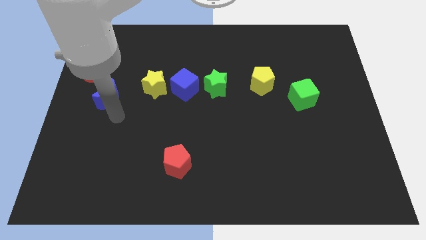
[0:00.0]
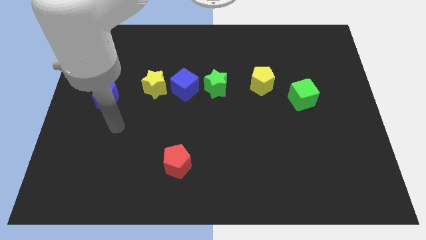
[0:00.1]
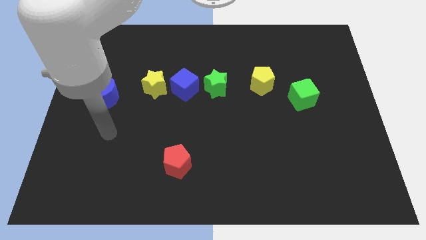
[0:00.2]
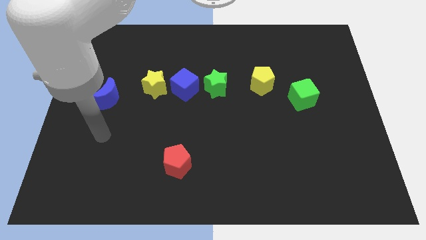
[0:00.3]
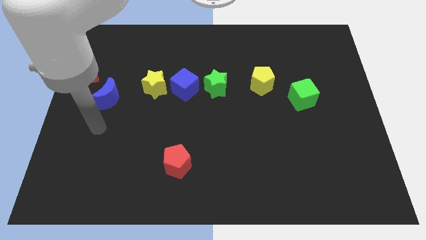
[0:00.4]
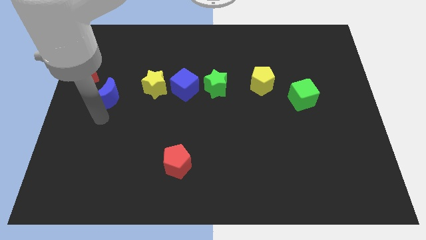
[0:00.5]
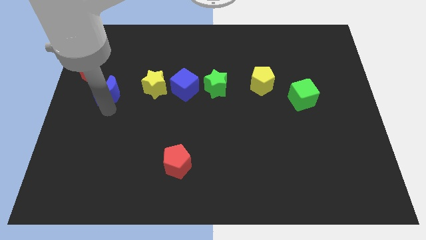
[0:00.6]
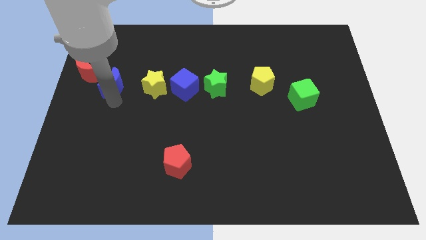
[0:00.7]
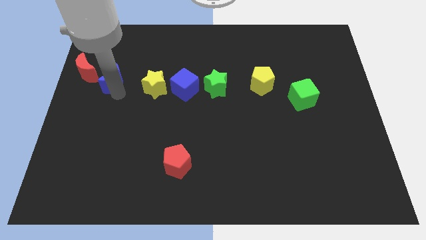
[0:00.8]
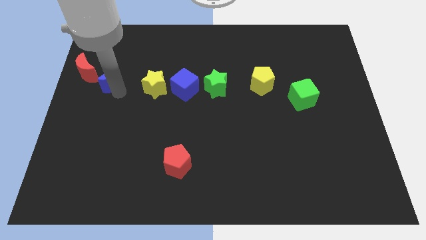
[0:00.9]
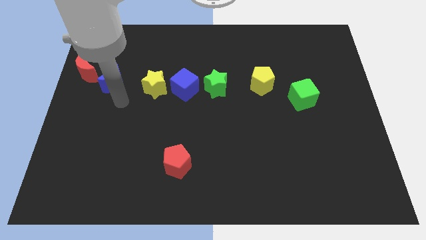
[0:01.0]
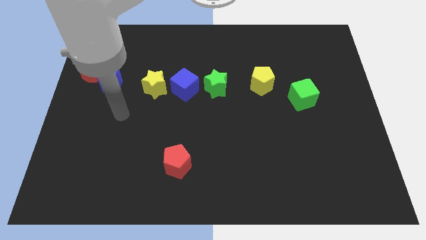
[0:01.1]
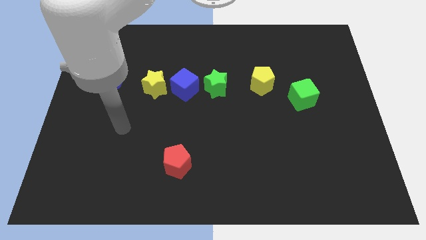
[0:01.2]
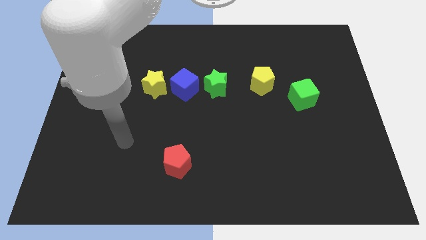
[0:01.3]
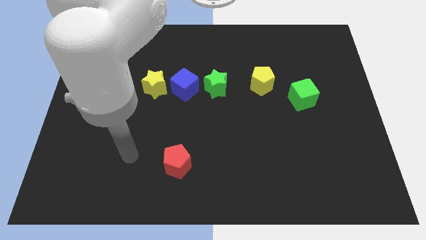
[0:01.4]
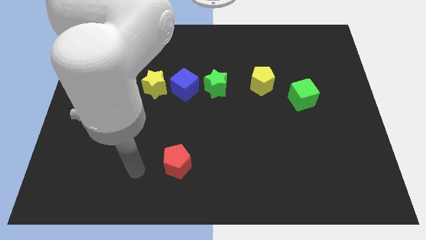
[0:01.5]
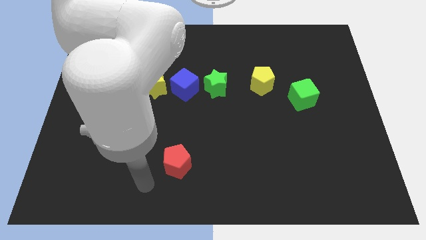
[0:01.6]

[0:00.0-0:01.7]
put the blue moon parallel left to the yellow star

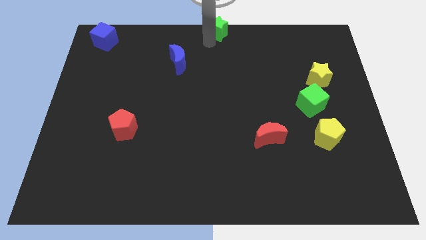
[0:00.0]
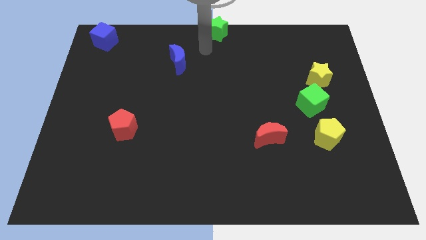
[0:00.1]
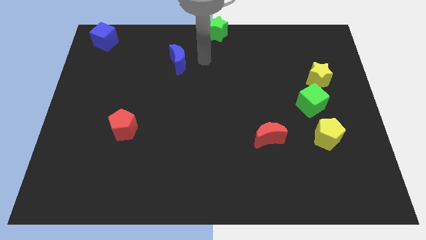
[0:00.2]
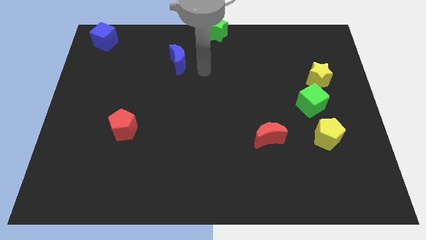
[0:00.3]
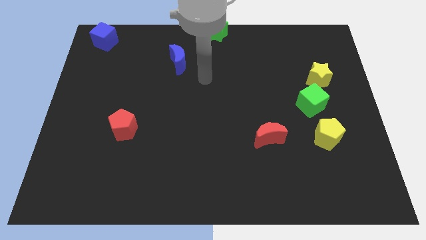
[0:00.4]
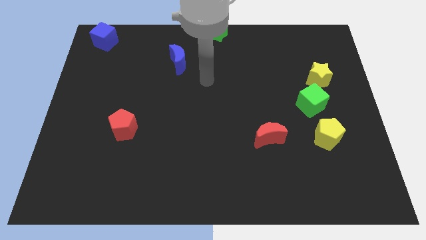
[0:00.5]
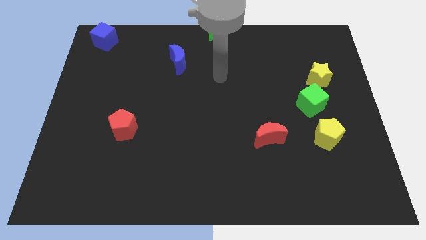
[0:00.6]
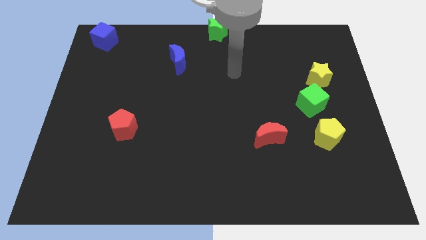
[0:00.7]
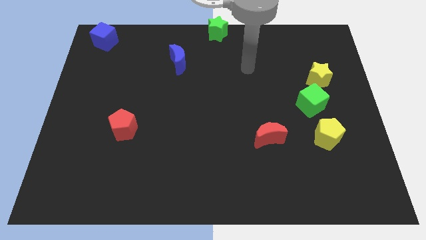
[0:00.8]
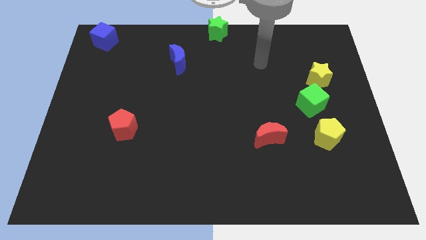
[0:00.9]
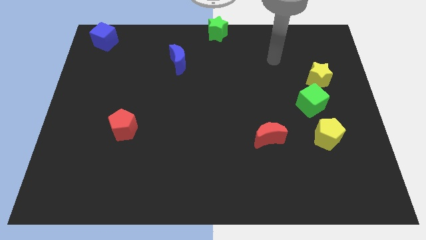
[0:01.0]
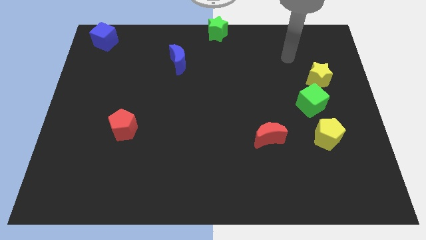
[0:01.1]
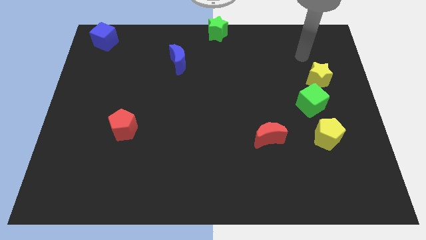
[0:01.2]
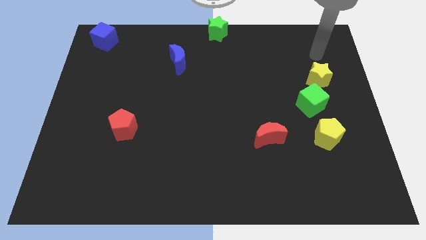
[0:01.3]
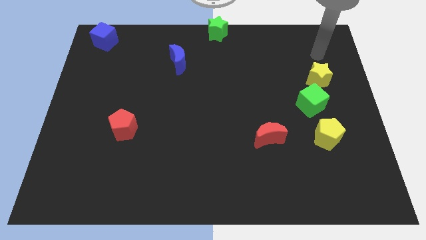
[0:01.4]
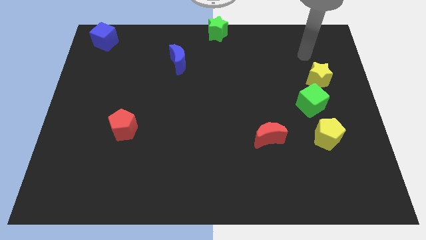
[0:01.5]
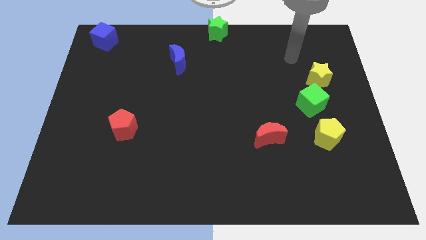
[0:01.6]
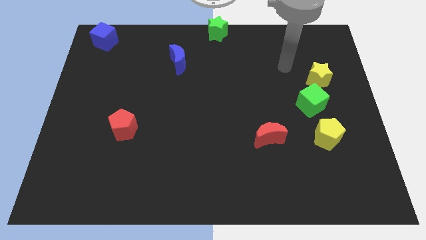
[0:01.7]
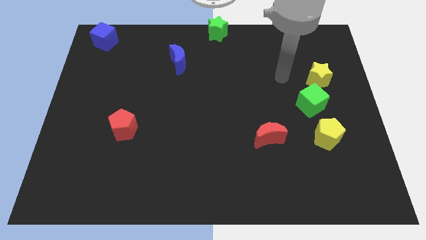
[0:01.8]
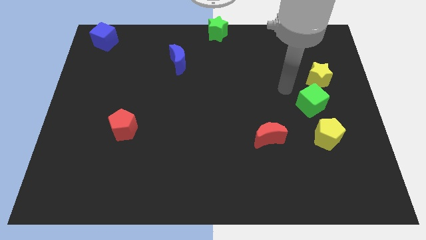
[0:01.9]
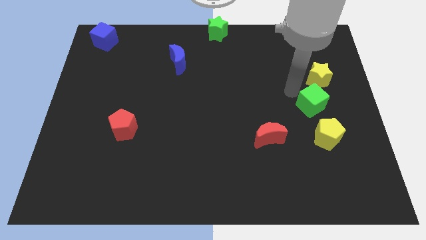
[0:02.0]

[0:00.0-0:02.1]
move your arm away from the green star
